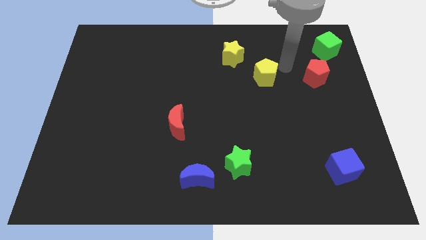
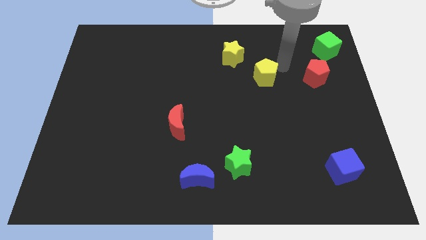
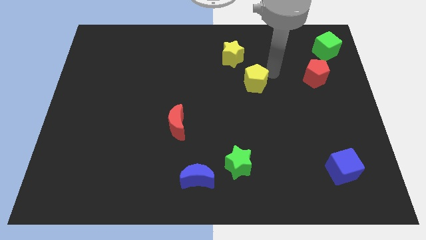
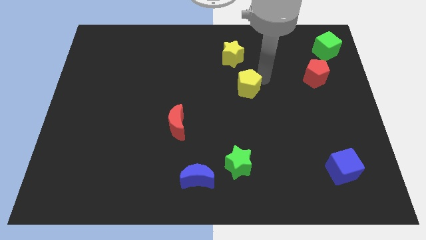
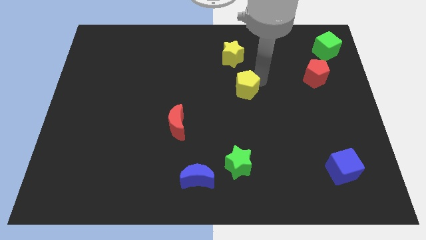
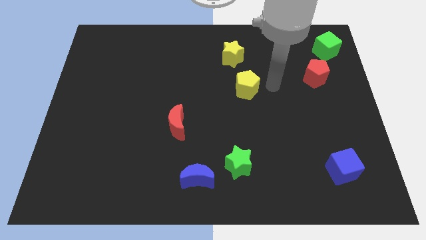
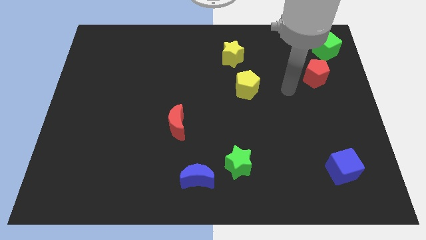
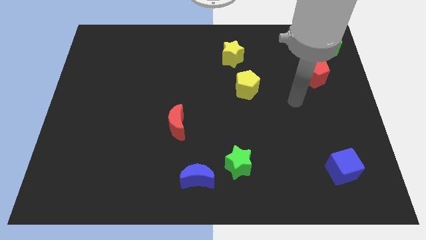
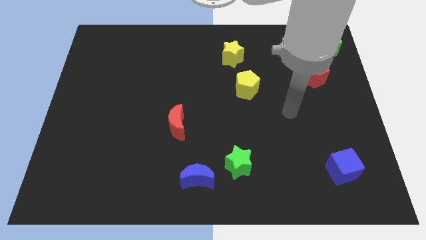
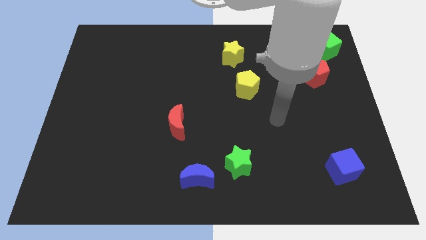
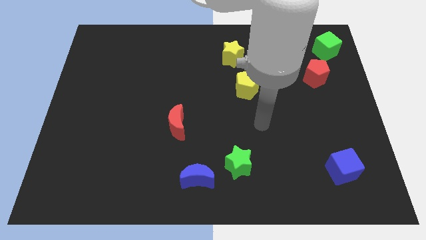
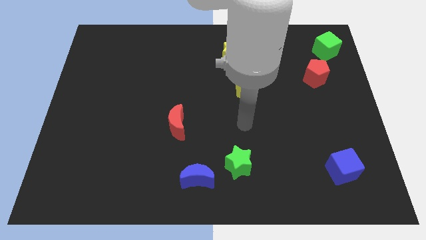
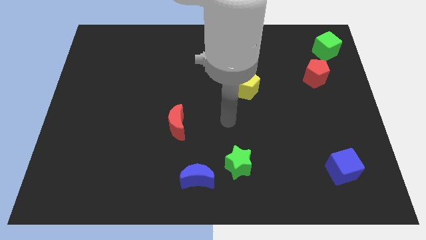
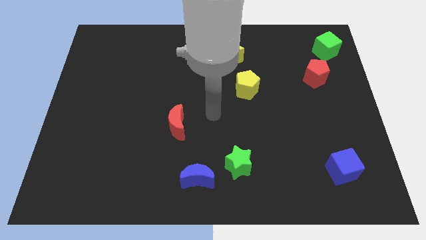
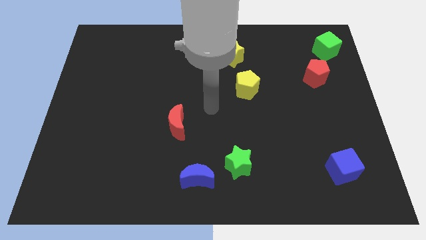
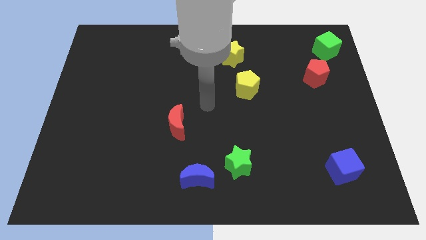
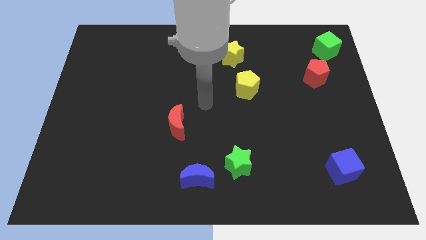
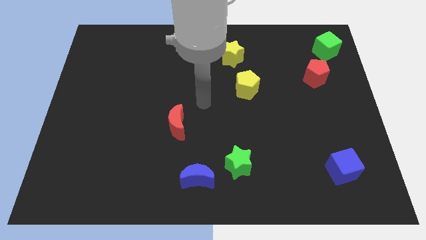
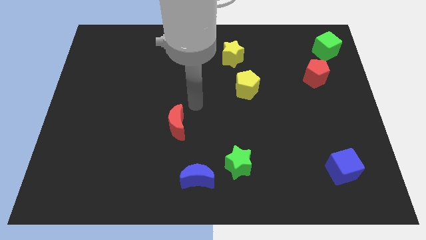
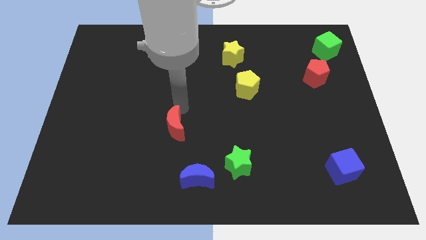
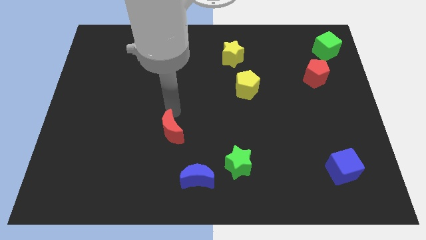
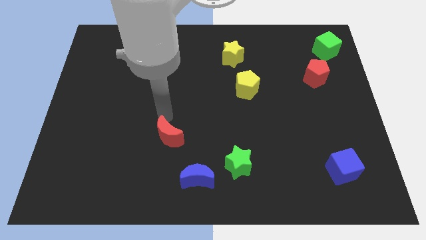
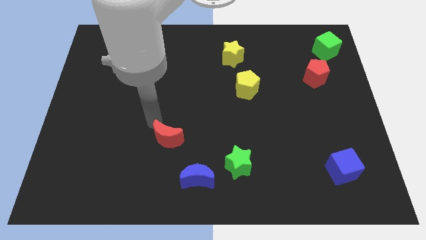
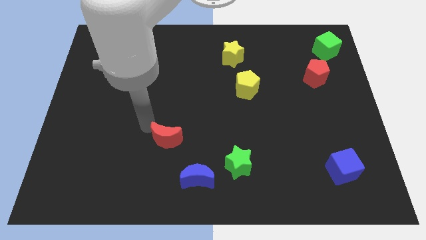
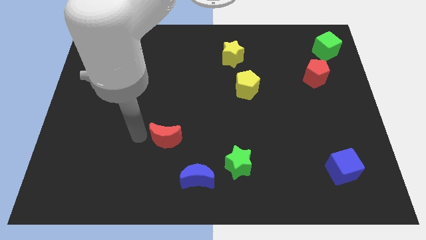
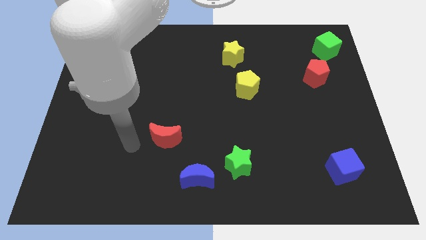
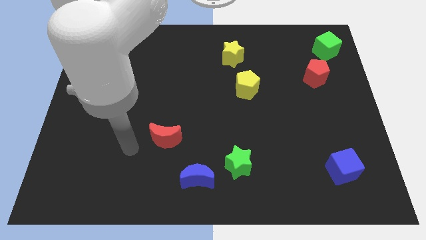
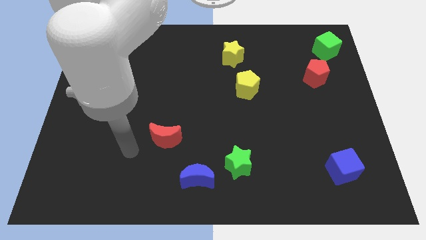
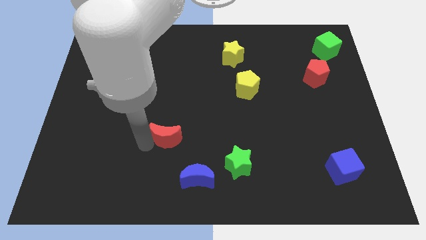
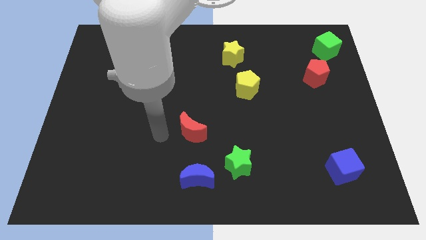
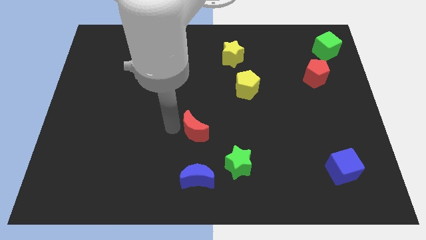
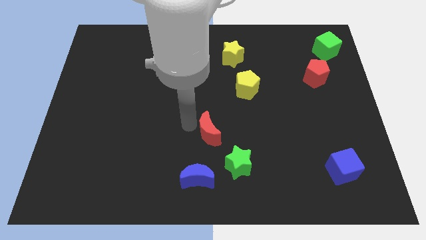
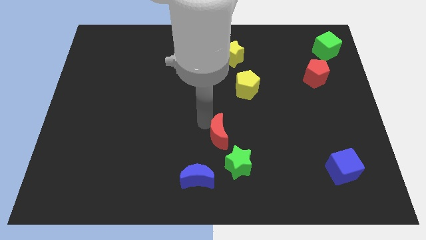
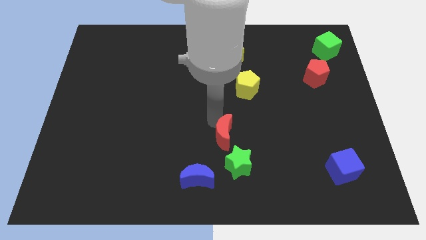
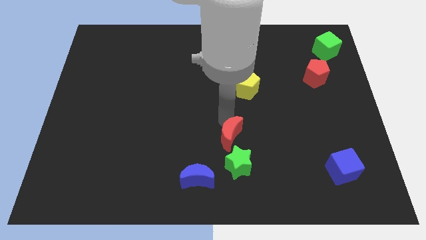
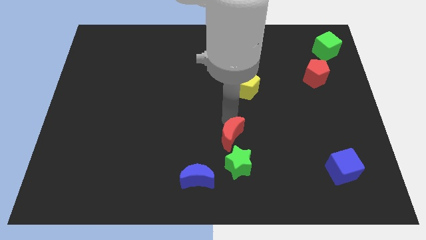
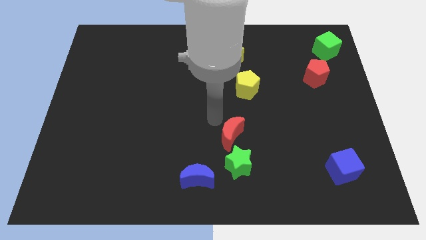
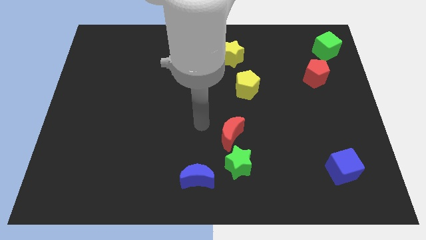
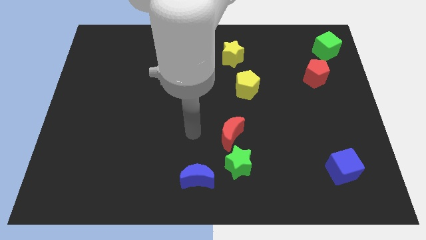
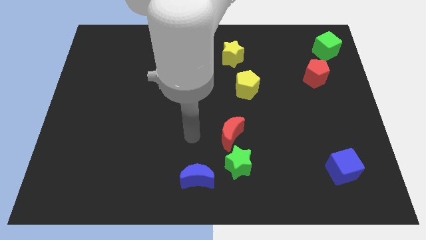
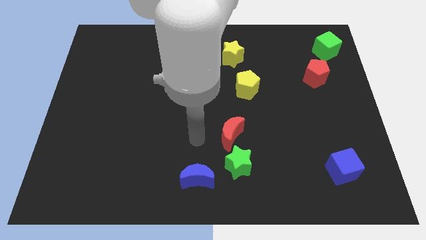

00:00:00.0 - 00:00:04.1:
drag the red crescent vertically above the green star

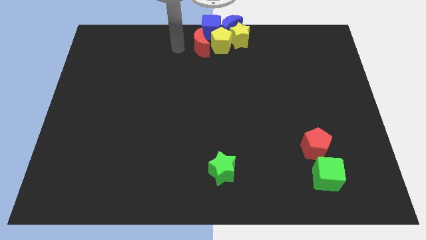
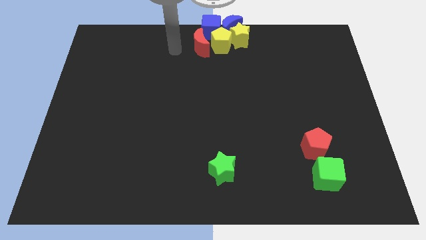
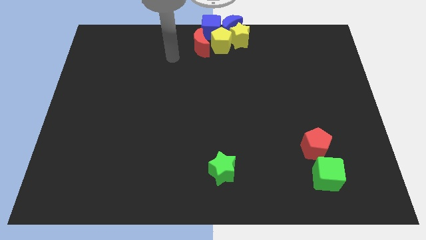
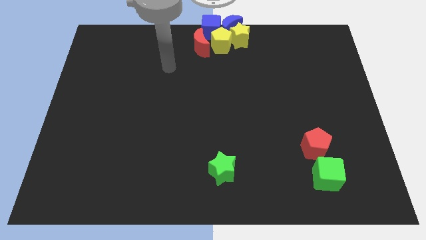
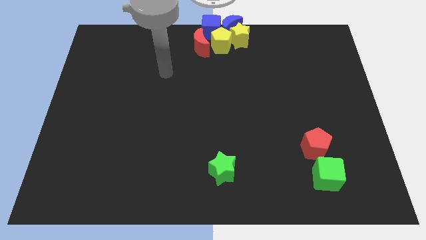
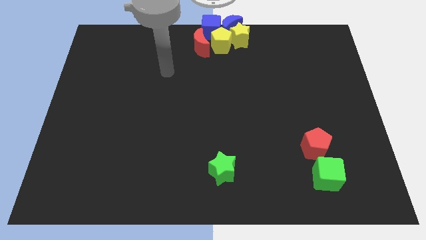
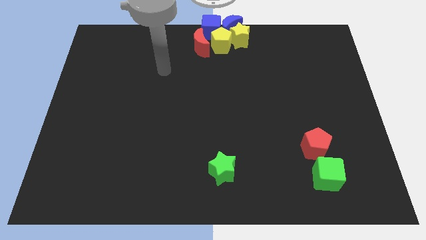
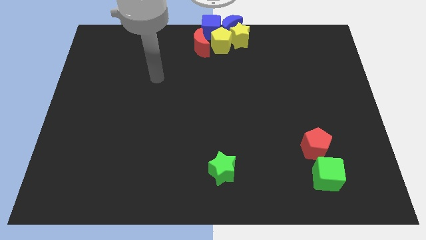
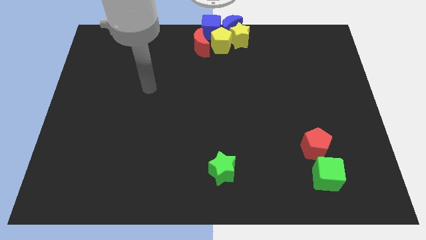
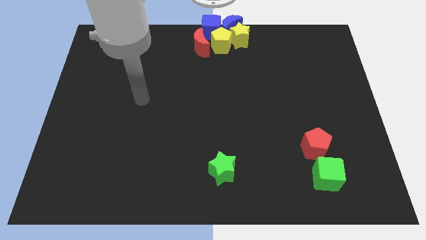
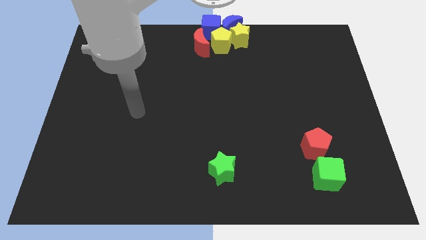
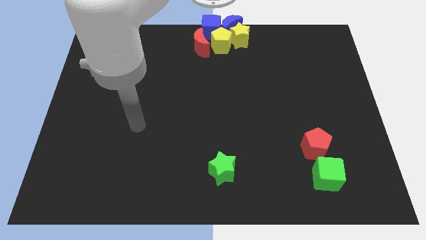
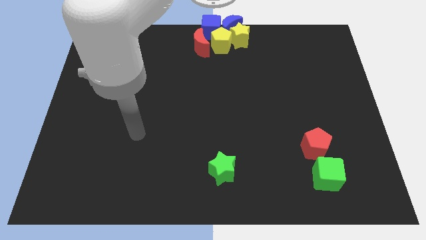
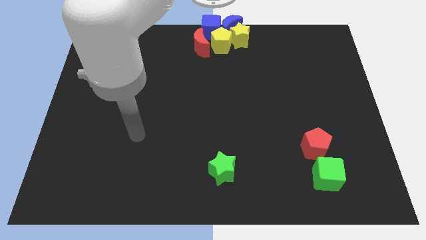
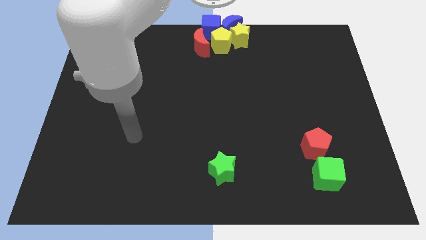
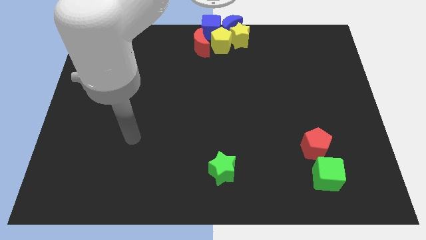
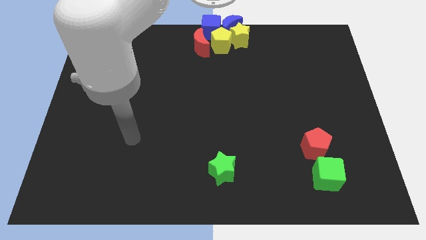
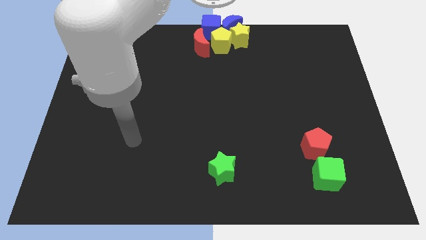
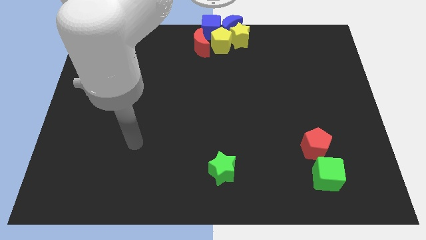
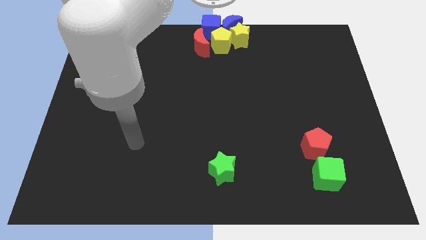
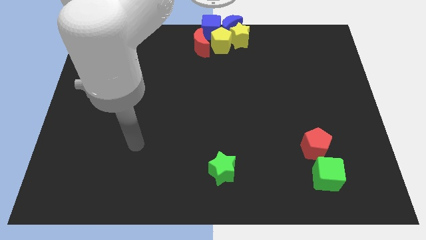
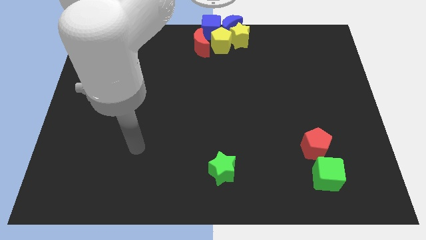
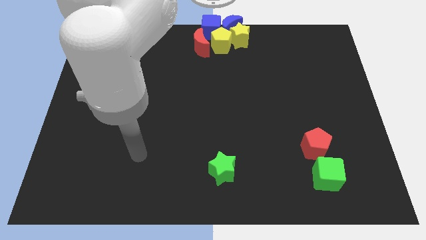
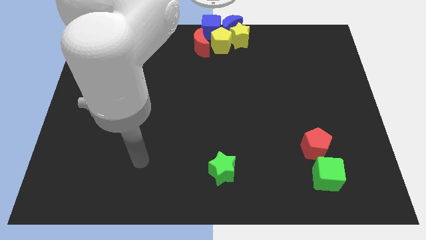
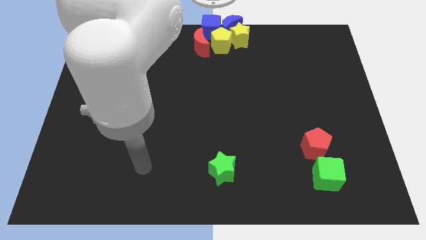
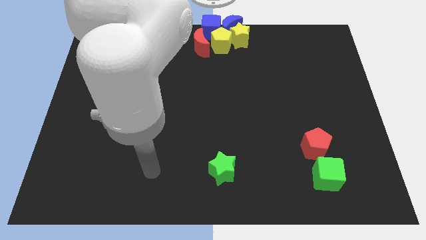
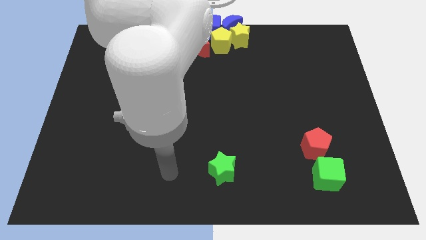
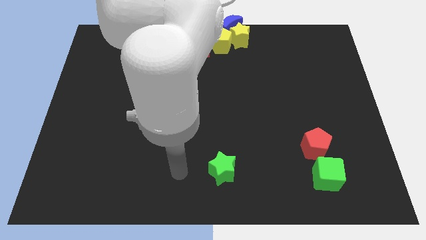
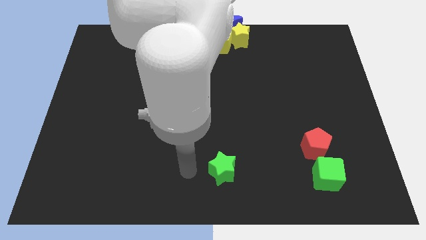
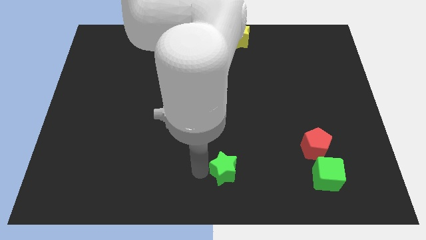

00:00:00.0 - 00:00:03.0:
move your arm to the left of the green star

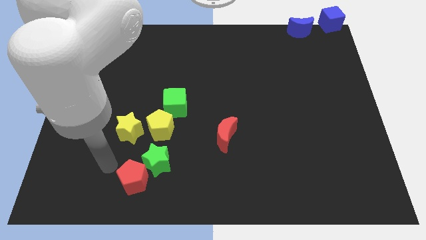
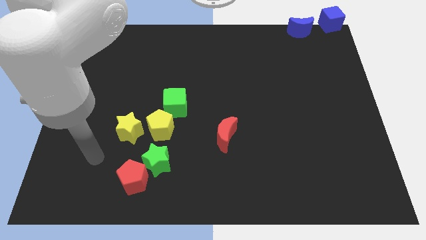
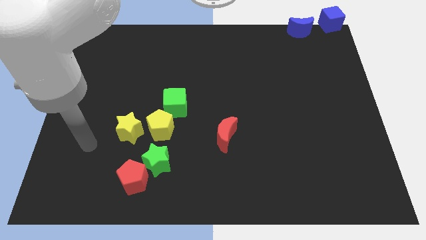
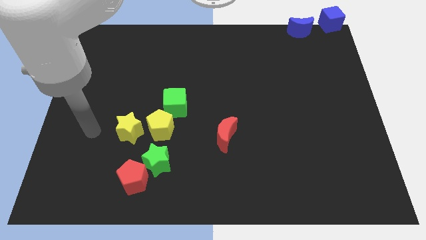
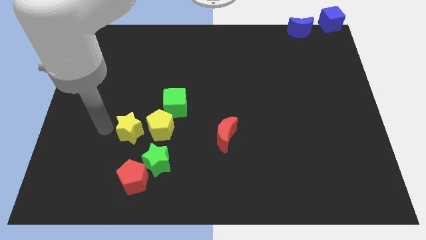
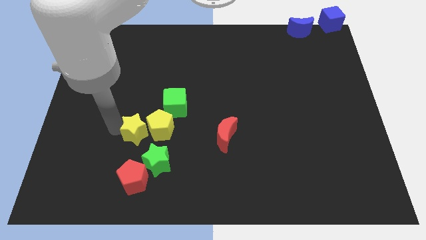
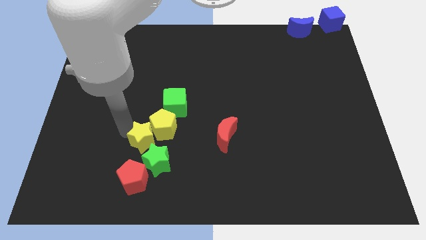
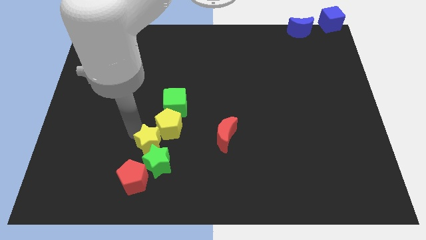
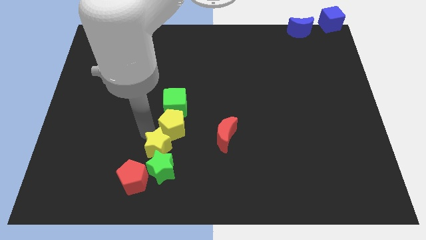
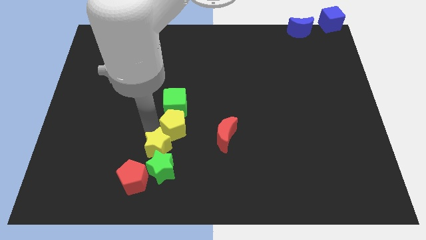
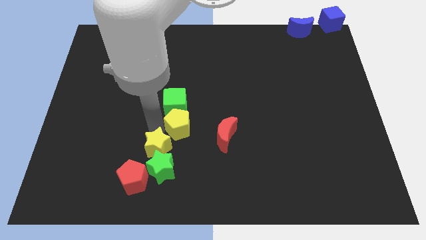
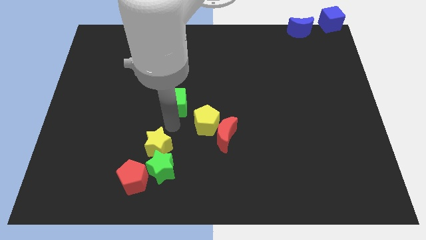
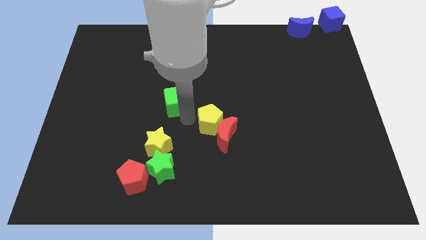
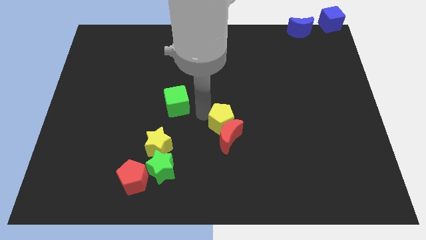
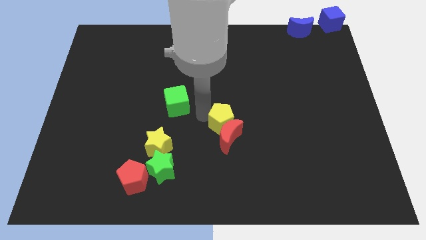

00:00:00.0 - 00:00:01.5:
move the yellow pentagon into the red crescent

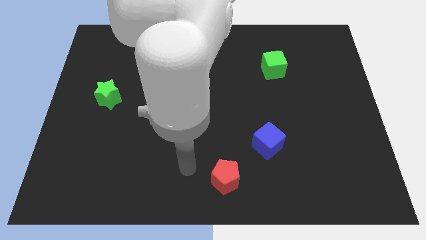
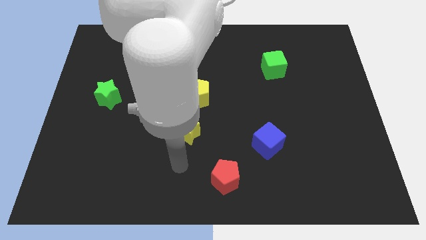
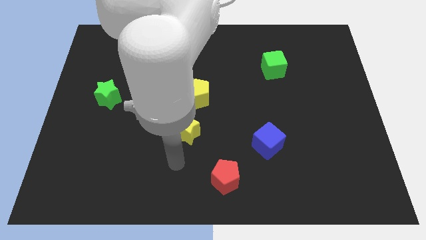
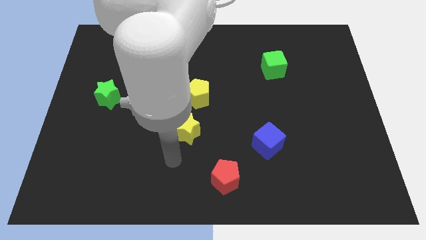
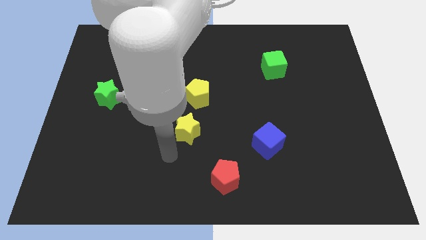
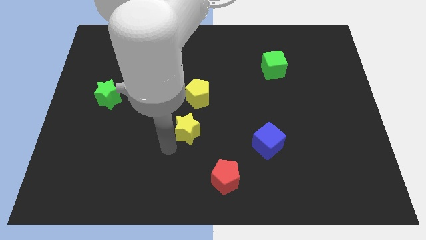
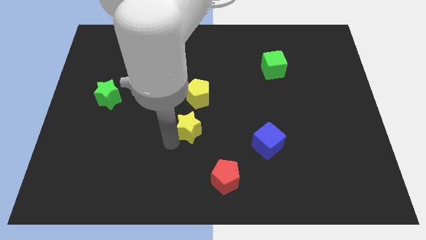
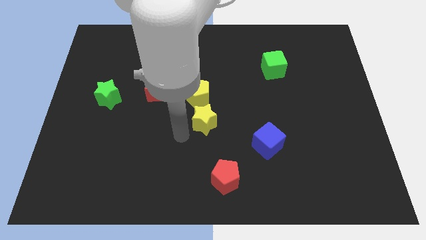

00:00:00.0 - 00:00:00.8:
touch the bottom of yellow star
